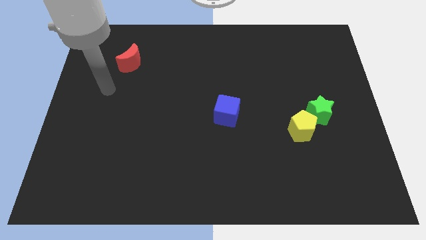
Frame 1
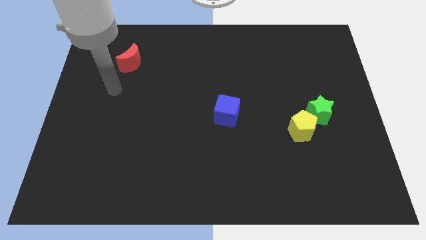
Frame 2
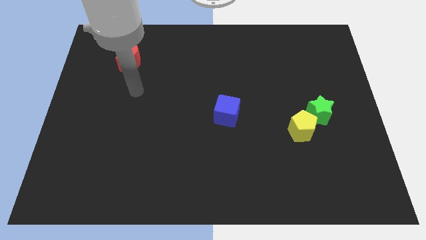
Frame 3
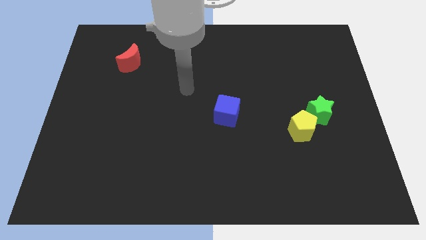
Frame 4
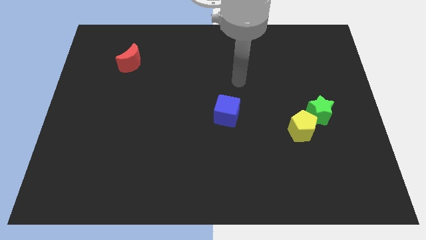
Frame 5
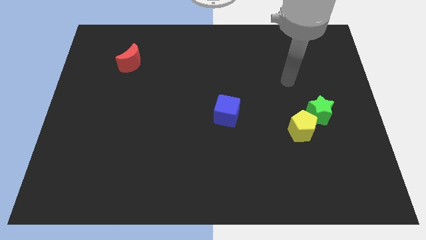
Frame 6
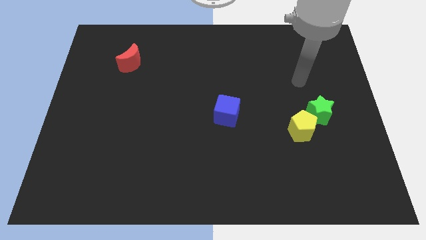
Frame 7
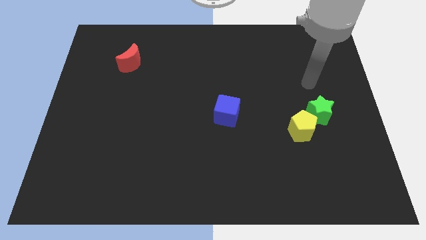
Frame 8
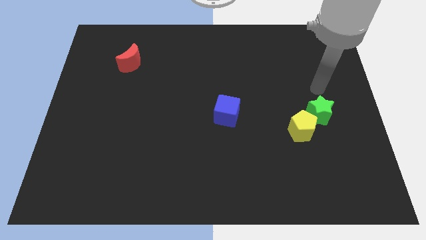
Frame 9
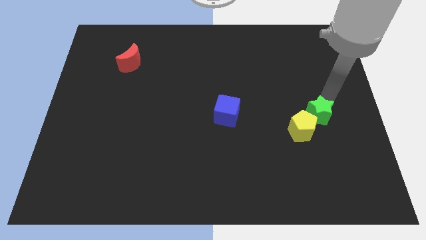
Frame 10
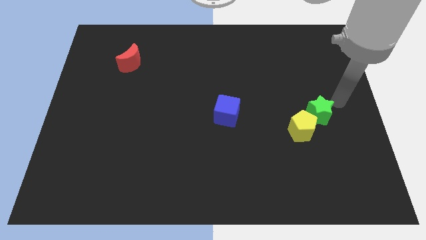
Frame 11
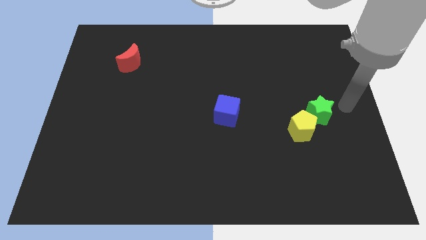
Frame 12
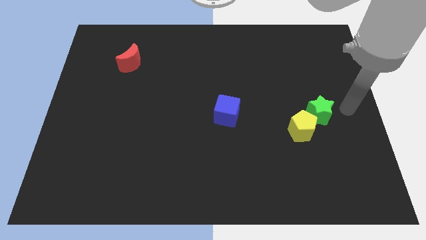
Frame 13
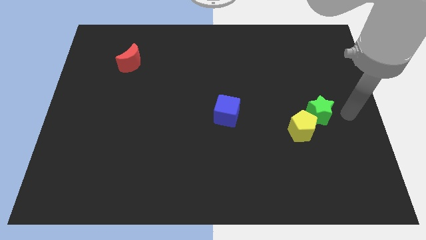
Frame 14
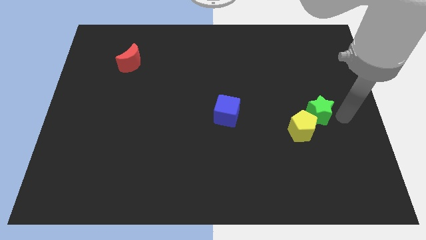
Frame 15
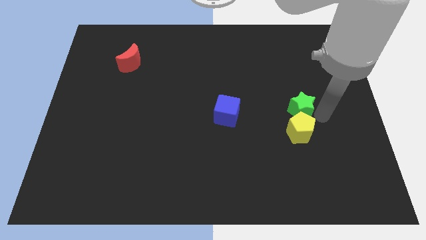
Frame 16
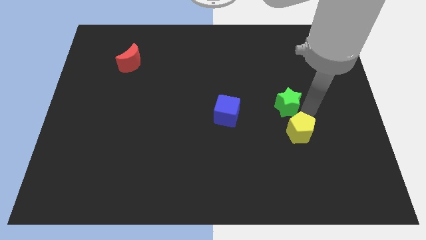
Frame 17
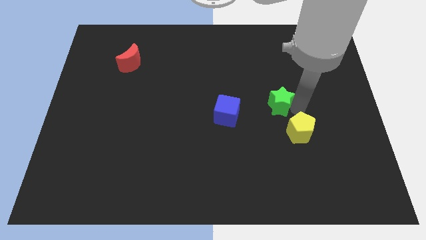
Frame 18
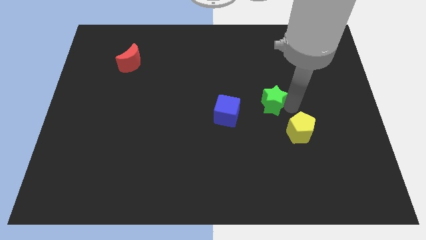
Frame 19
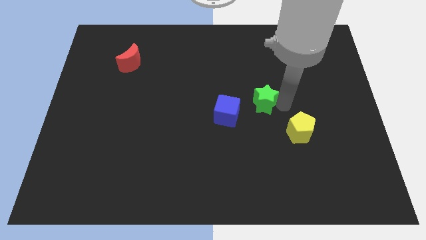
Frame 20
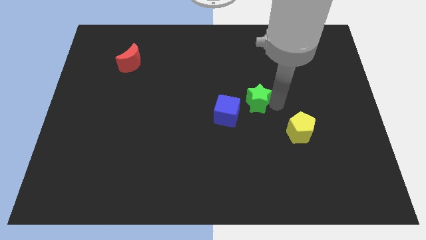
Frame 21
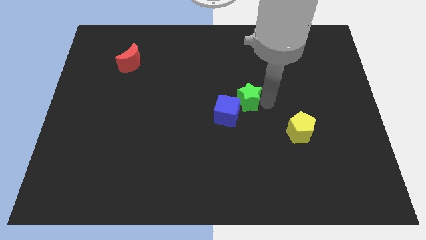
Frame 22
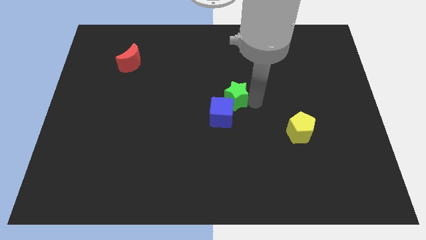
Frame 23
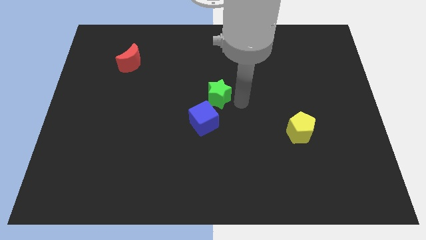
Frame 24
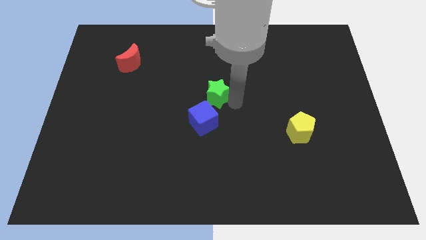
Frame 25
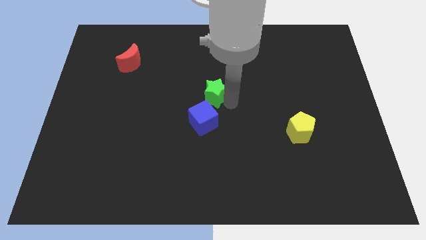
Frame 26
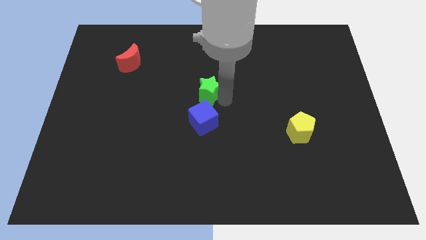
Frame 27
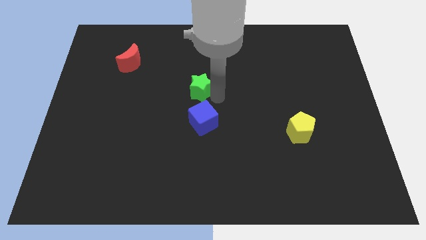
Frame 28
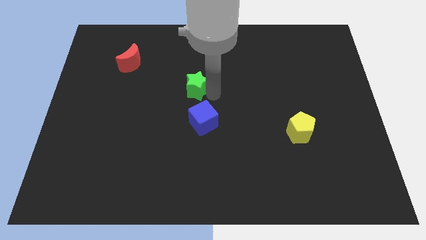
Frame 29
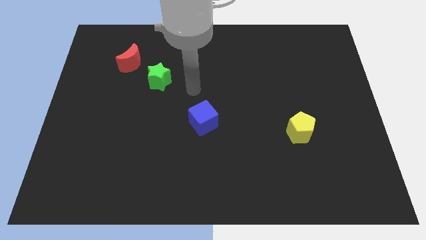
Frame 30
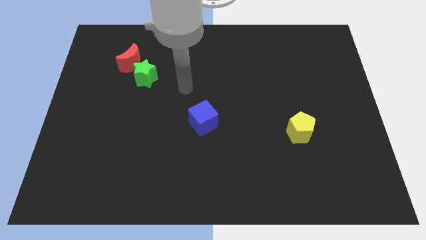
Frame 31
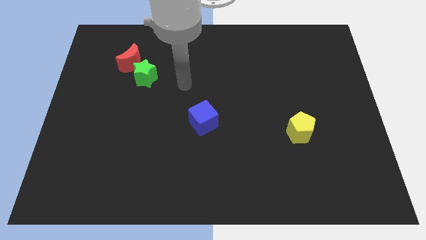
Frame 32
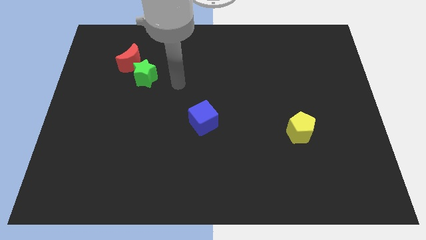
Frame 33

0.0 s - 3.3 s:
move the green star close to the red moon

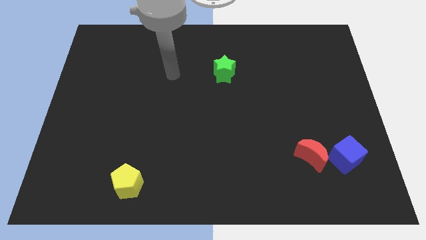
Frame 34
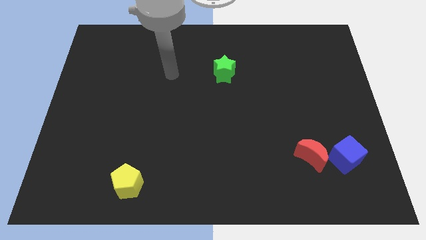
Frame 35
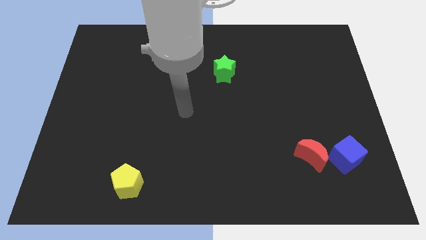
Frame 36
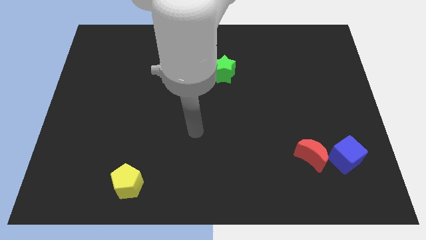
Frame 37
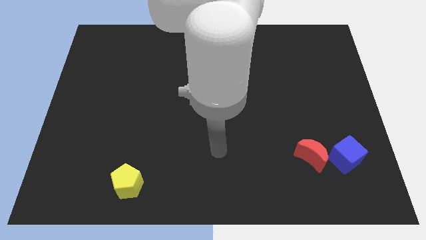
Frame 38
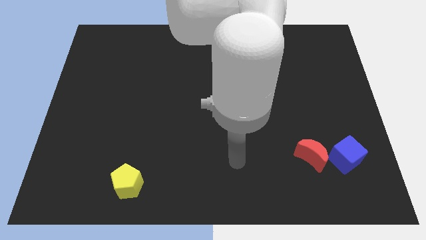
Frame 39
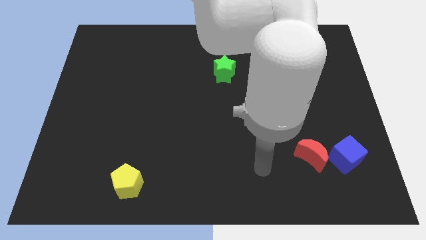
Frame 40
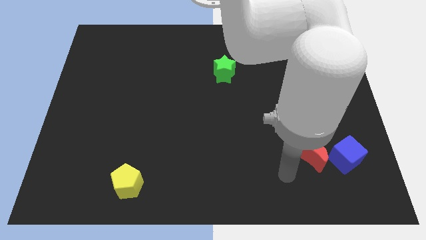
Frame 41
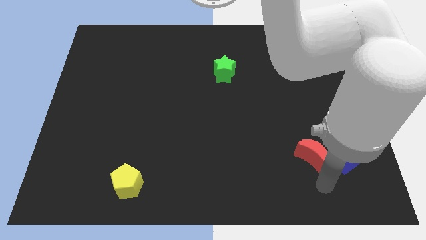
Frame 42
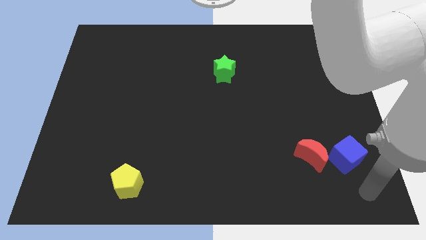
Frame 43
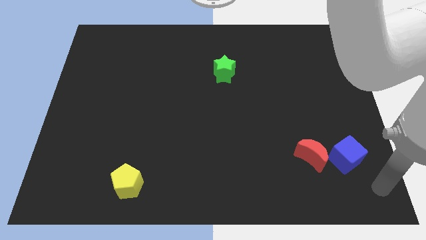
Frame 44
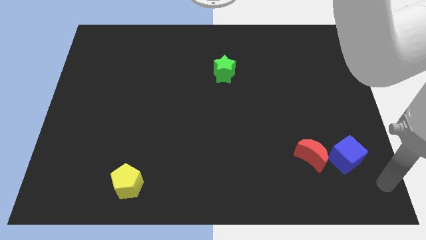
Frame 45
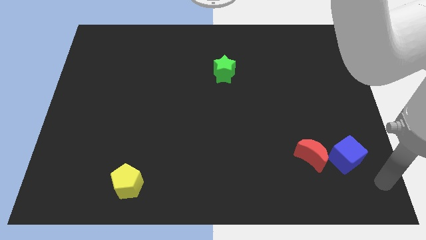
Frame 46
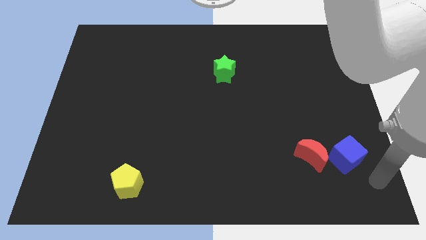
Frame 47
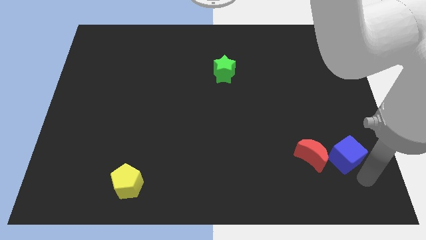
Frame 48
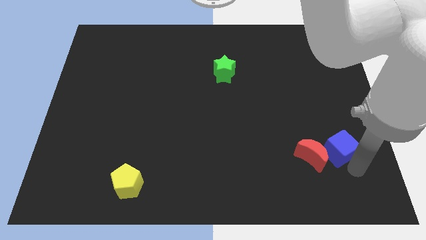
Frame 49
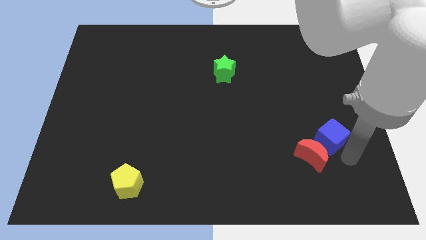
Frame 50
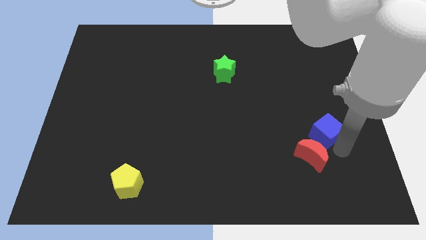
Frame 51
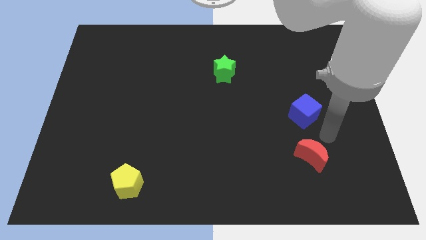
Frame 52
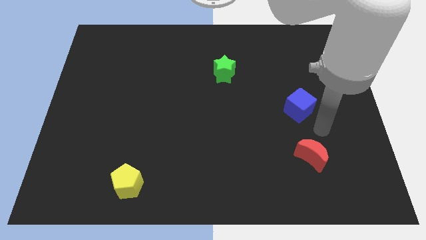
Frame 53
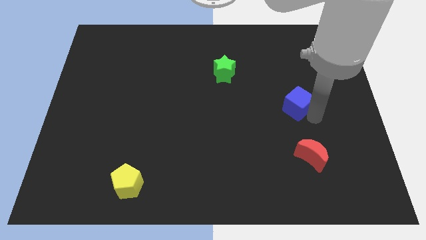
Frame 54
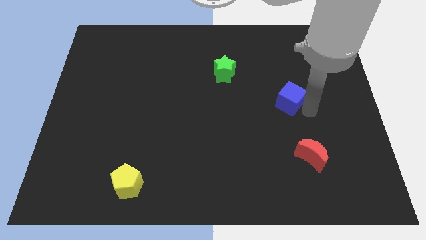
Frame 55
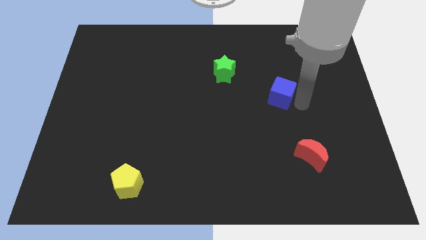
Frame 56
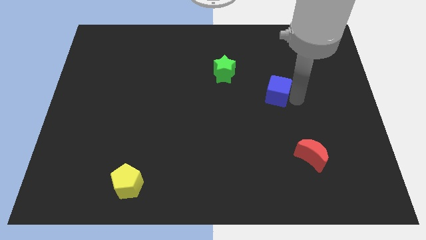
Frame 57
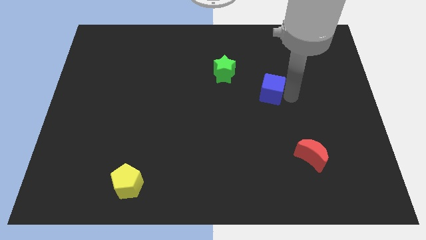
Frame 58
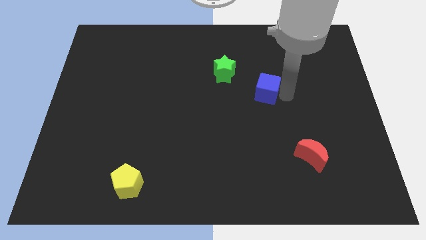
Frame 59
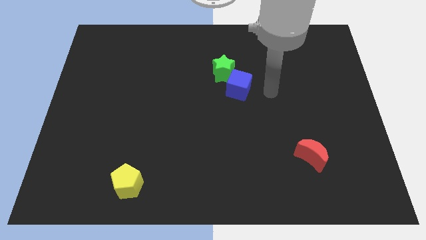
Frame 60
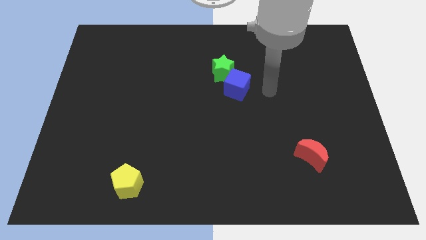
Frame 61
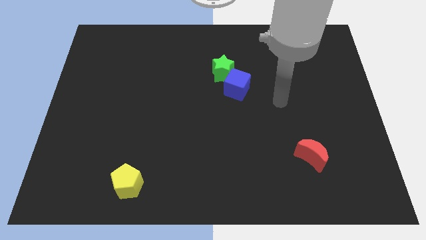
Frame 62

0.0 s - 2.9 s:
move the blue cube next to the star

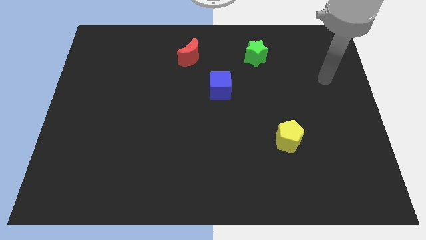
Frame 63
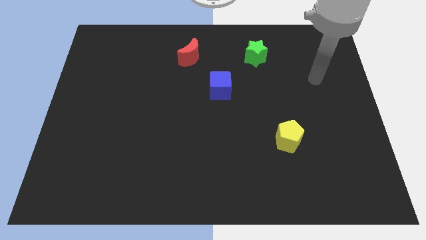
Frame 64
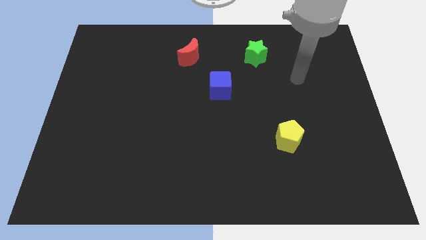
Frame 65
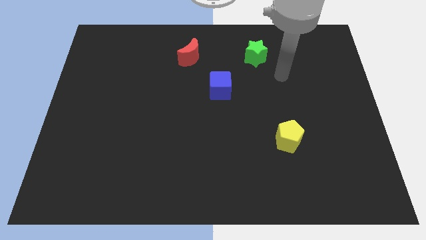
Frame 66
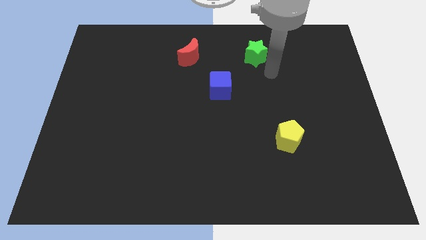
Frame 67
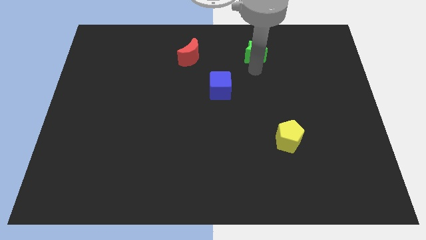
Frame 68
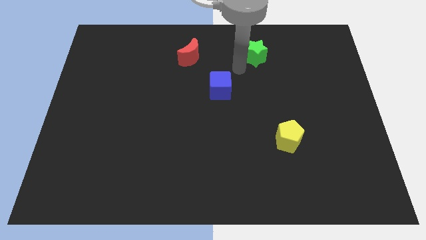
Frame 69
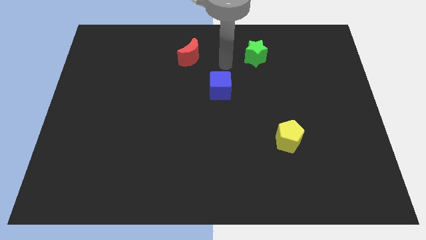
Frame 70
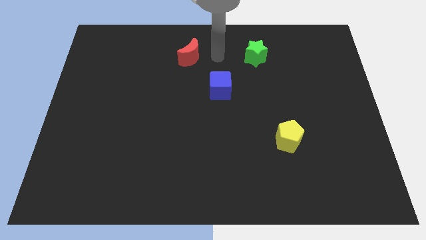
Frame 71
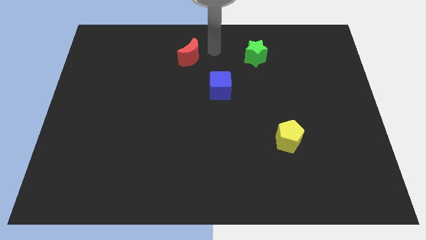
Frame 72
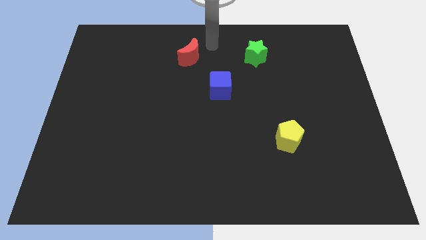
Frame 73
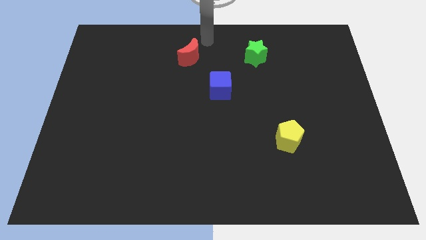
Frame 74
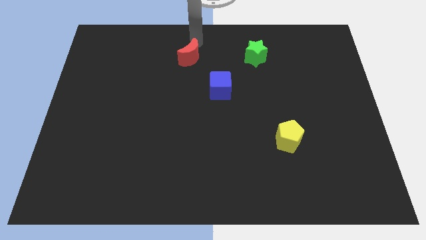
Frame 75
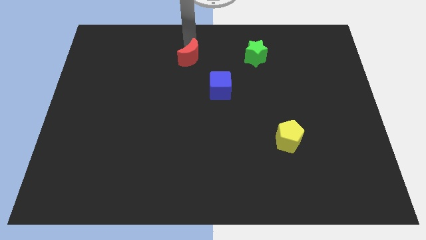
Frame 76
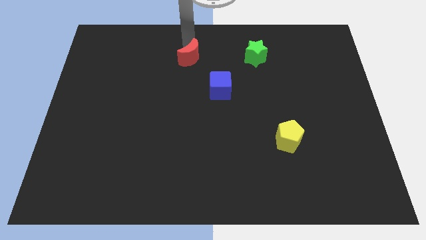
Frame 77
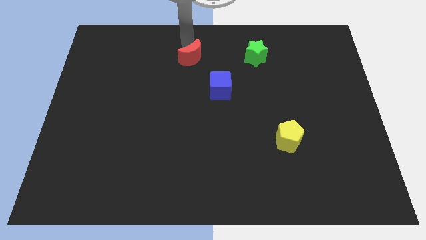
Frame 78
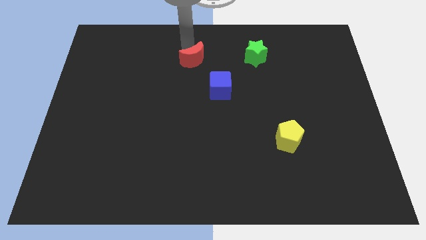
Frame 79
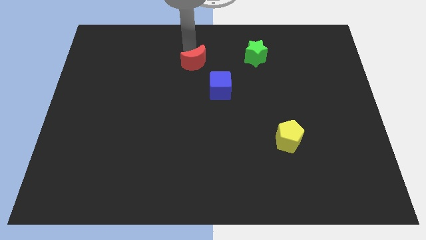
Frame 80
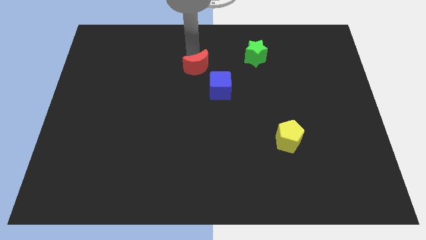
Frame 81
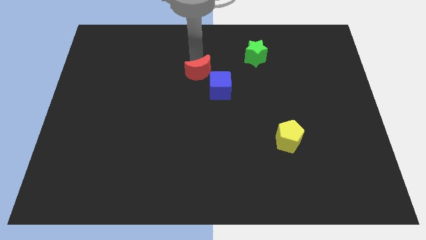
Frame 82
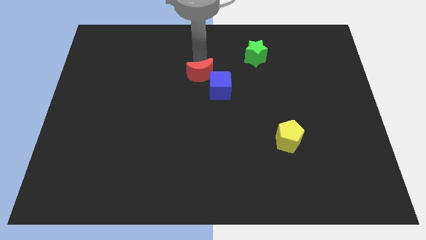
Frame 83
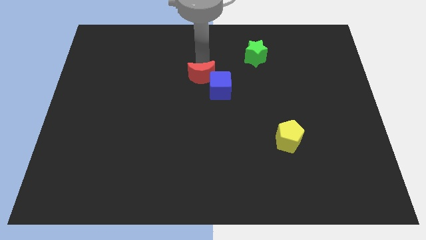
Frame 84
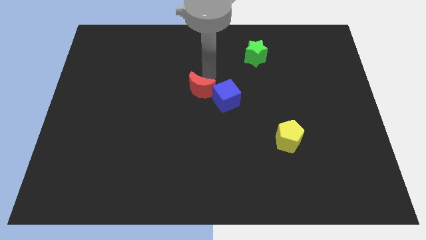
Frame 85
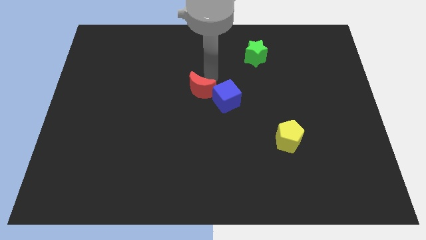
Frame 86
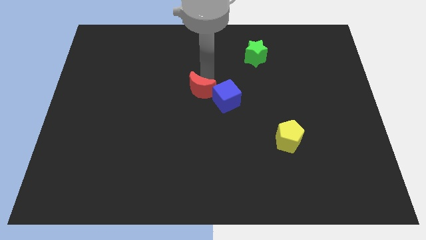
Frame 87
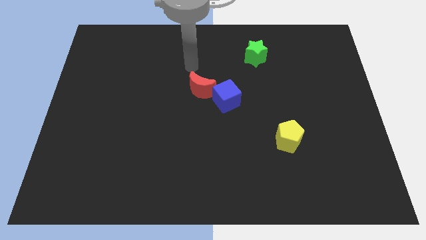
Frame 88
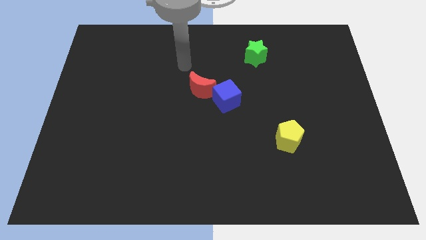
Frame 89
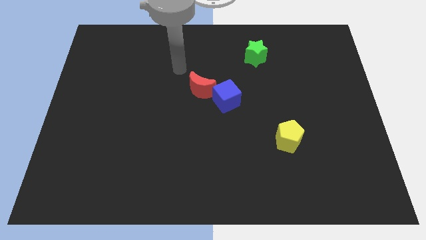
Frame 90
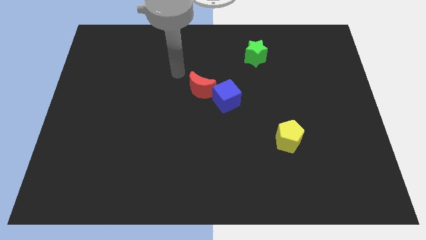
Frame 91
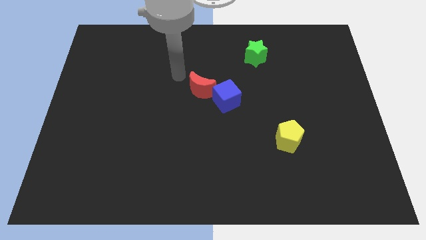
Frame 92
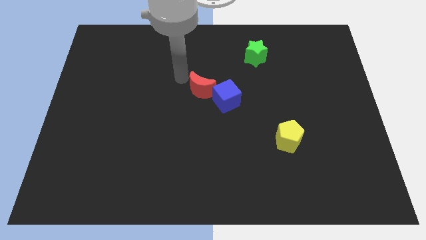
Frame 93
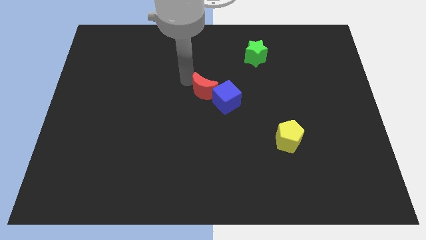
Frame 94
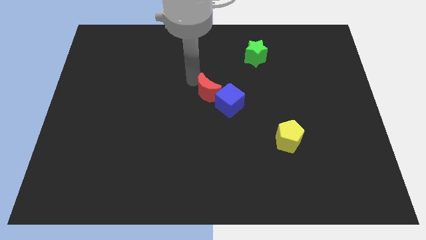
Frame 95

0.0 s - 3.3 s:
push the red moon towards the cube
